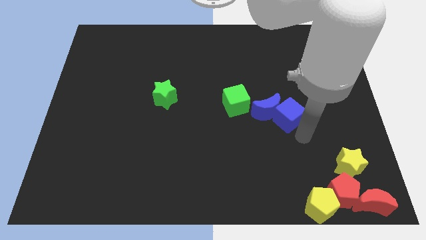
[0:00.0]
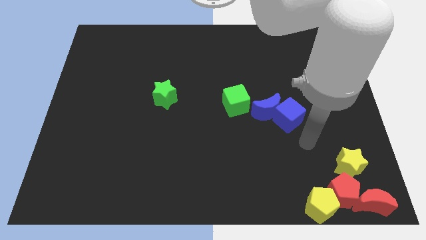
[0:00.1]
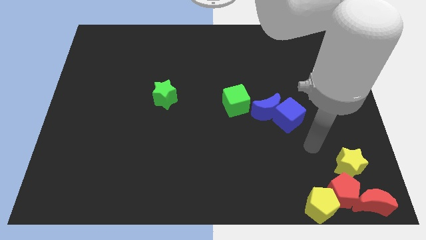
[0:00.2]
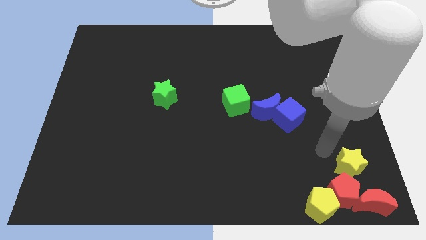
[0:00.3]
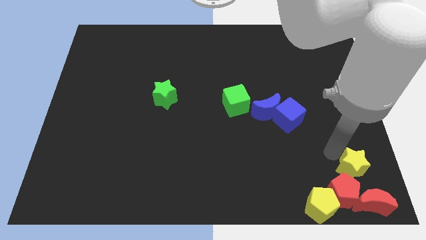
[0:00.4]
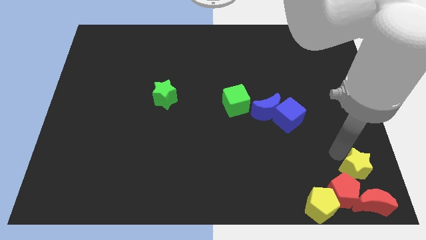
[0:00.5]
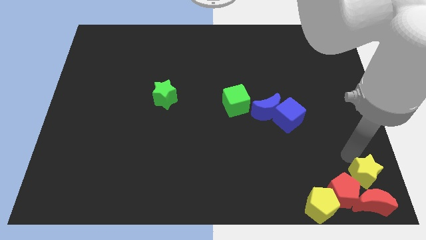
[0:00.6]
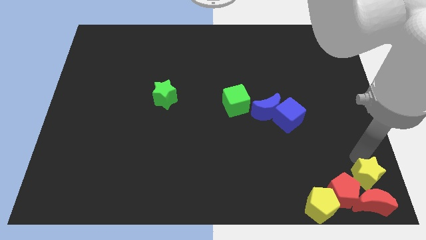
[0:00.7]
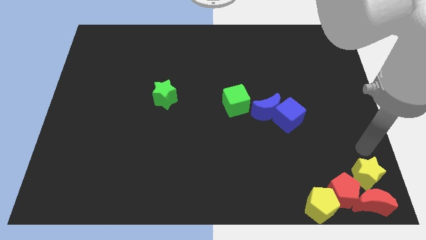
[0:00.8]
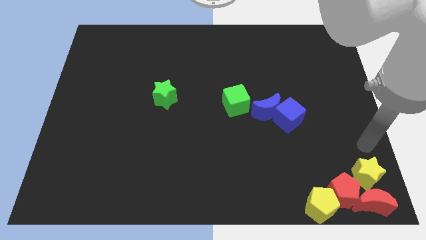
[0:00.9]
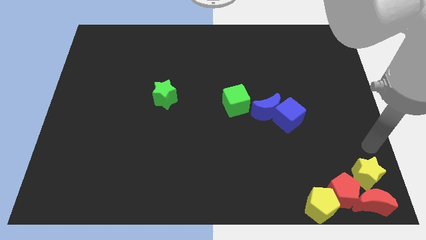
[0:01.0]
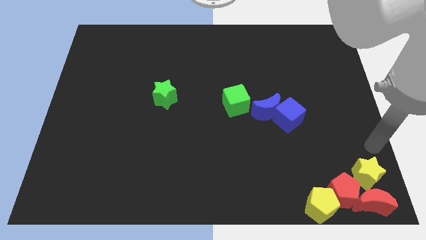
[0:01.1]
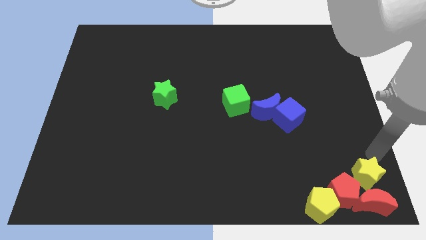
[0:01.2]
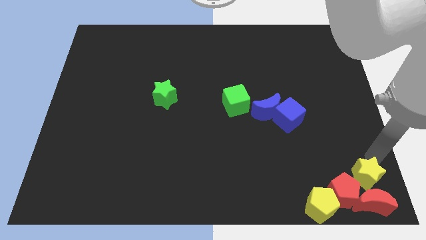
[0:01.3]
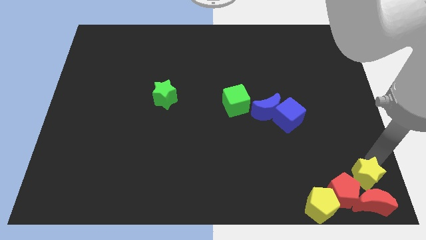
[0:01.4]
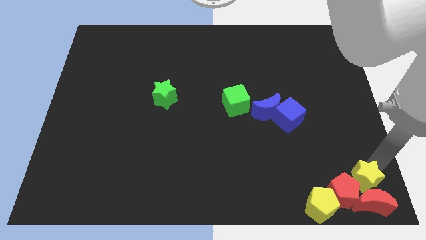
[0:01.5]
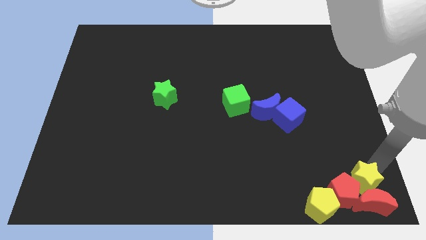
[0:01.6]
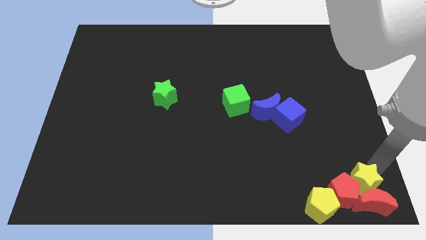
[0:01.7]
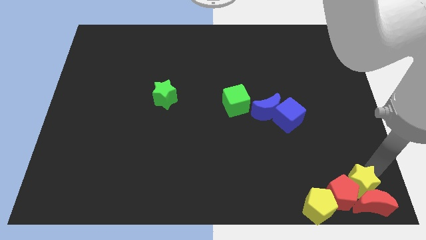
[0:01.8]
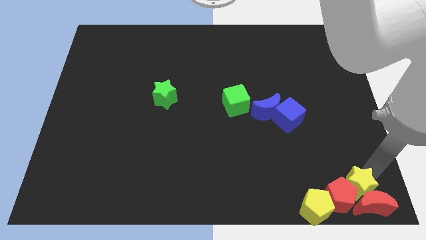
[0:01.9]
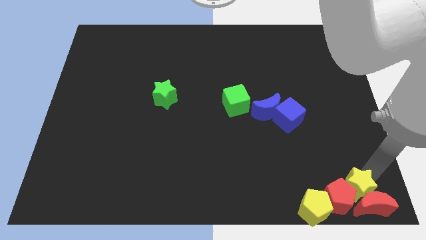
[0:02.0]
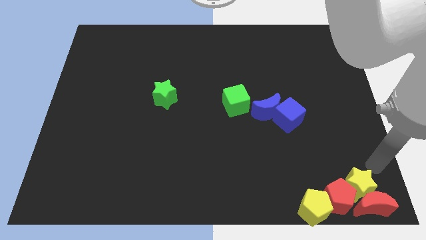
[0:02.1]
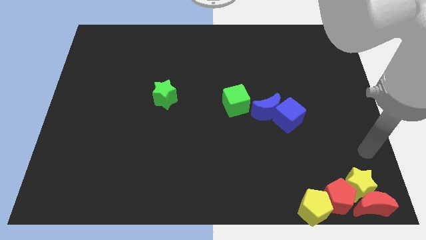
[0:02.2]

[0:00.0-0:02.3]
move the yellow star into the red blocks

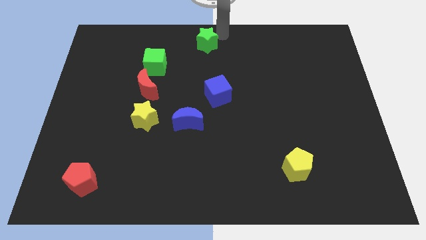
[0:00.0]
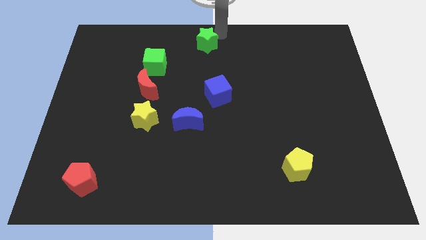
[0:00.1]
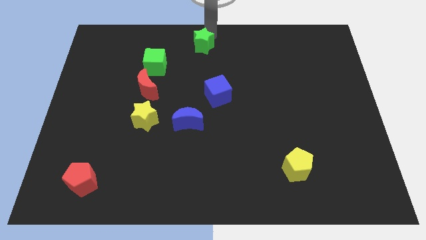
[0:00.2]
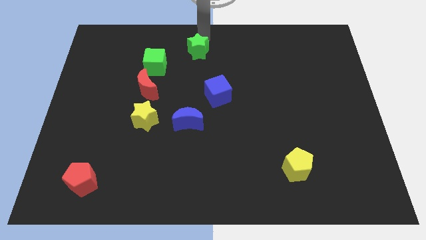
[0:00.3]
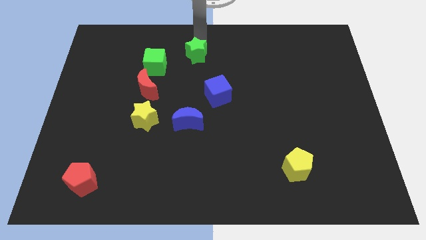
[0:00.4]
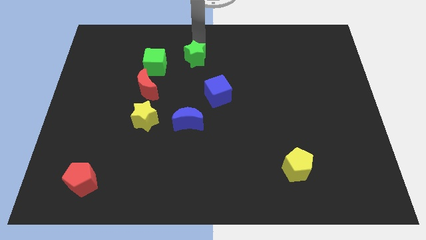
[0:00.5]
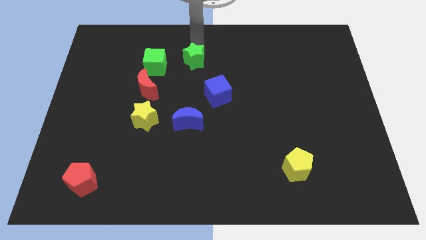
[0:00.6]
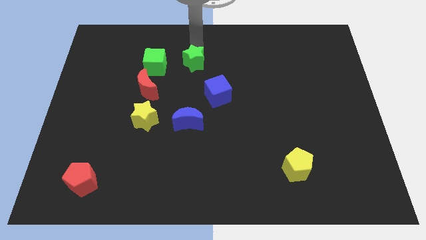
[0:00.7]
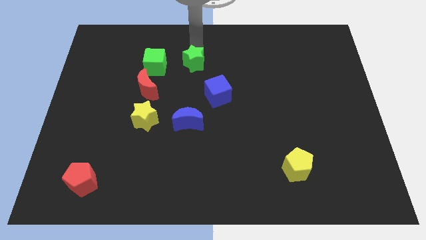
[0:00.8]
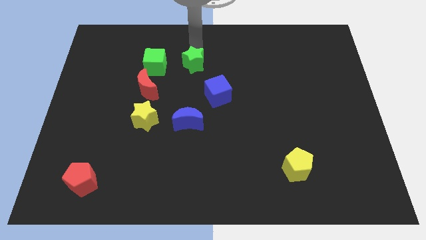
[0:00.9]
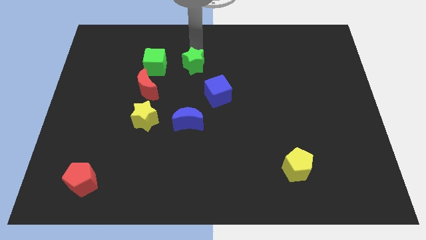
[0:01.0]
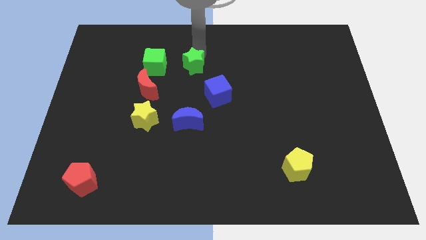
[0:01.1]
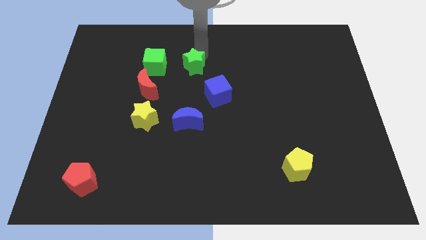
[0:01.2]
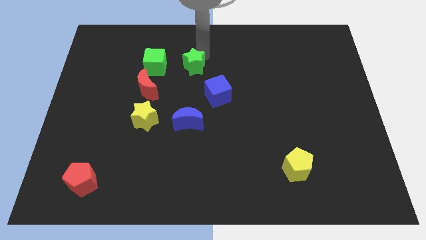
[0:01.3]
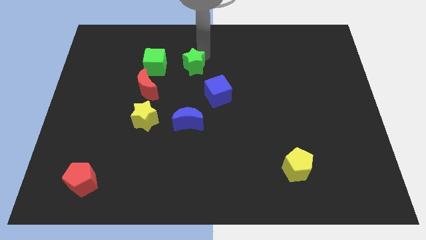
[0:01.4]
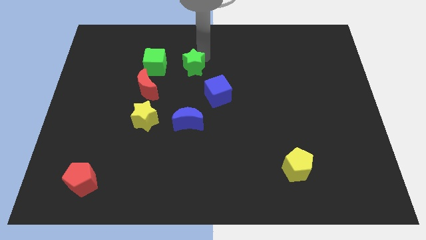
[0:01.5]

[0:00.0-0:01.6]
place the green star right to the green cube

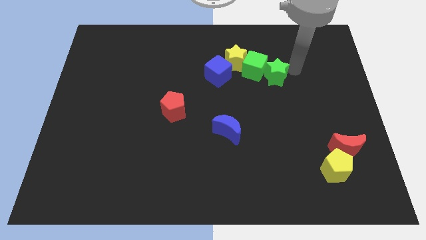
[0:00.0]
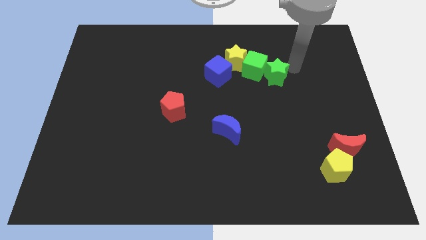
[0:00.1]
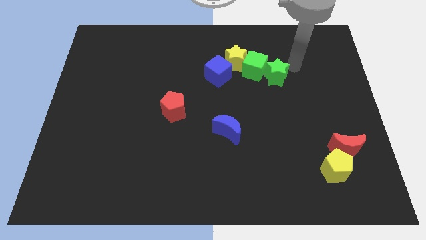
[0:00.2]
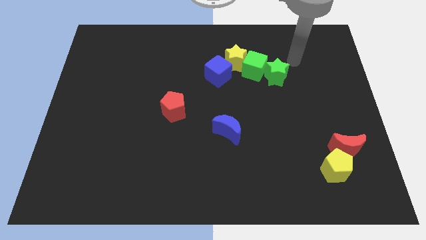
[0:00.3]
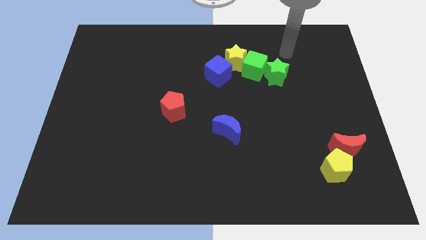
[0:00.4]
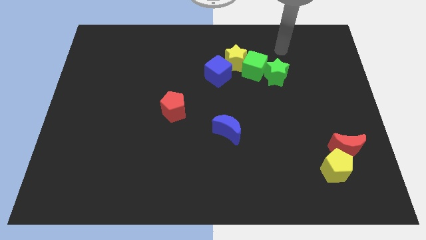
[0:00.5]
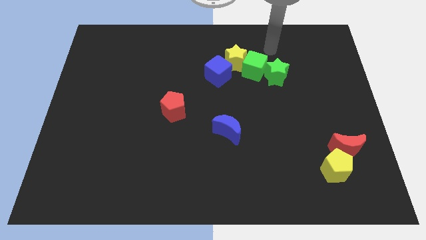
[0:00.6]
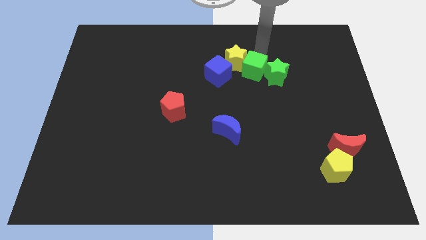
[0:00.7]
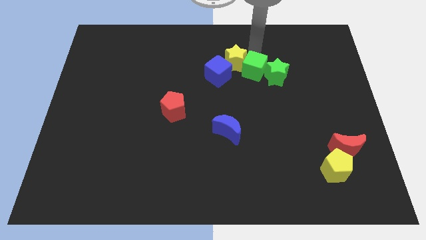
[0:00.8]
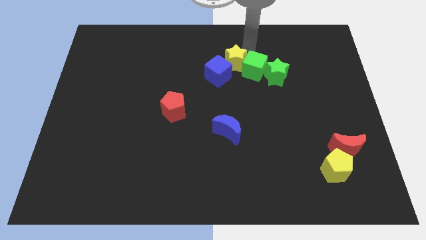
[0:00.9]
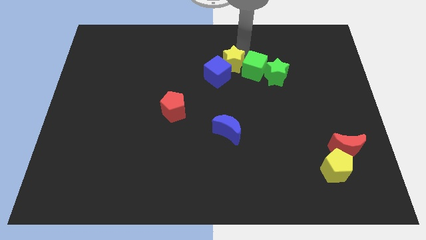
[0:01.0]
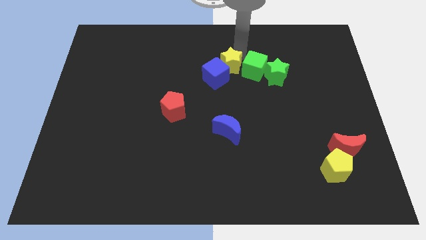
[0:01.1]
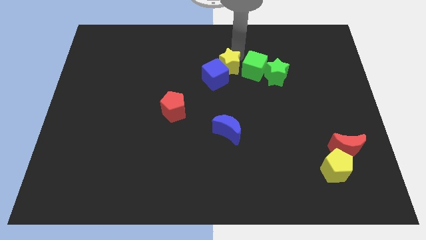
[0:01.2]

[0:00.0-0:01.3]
tap the top side of the yellow star

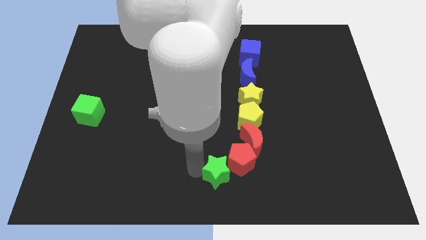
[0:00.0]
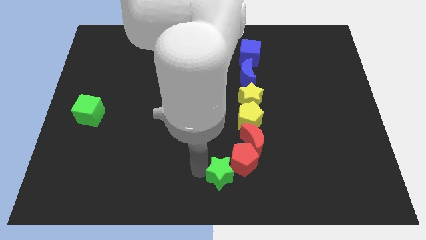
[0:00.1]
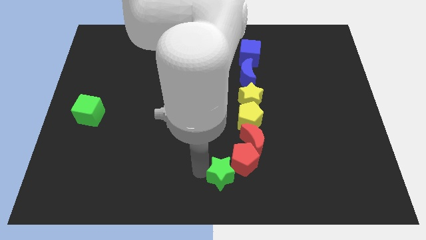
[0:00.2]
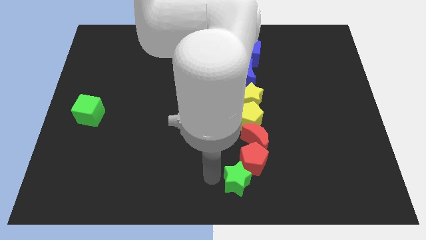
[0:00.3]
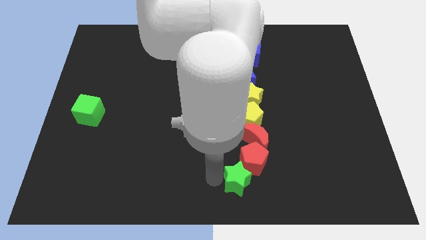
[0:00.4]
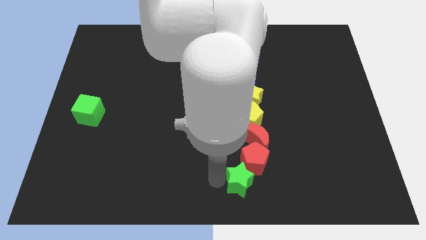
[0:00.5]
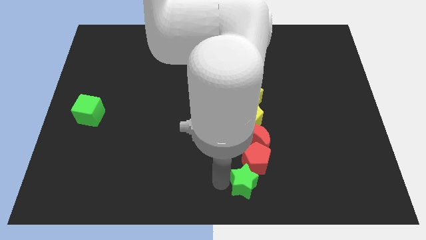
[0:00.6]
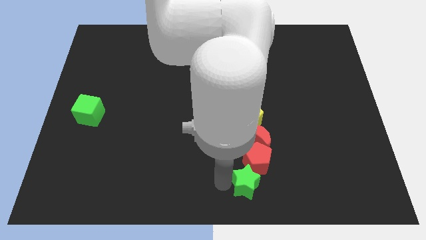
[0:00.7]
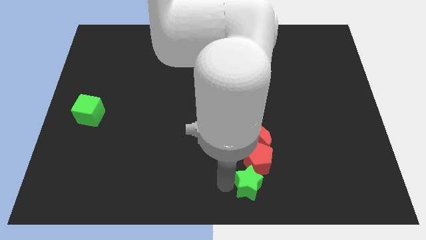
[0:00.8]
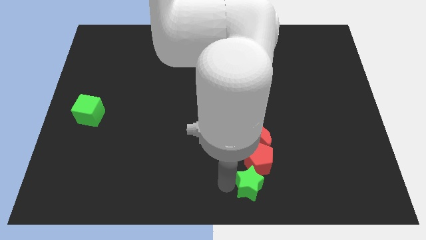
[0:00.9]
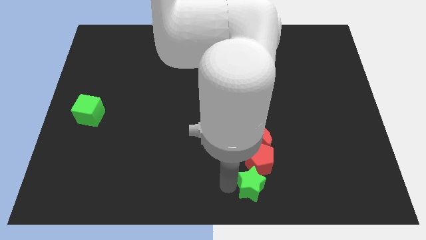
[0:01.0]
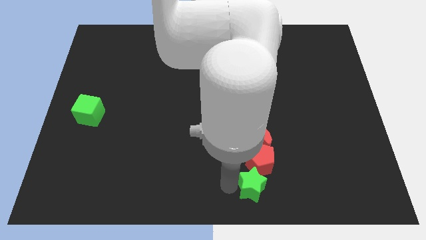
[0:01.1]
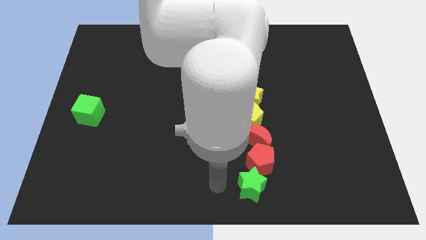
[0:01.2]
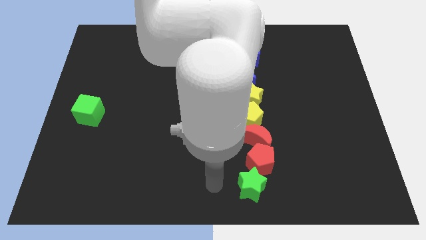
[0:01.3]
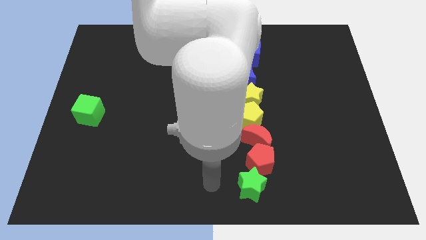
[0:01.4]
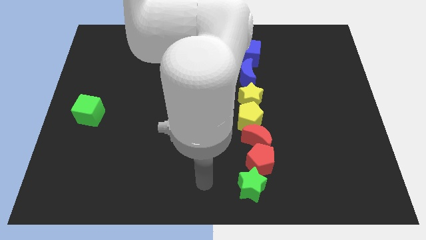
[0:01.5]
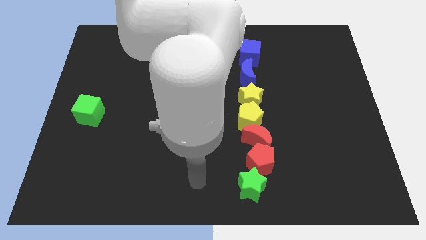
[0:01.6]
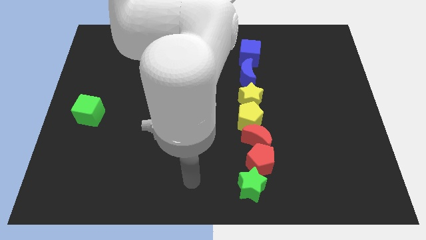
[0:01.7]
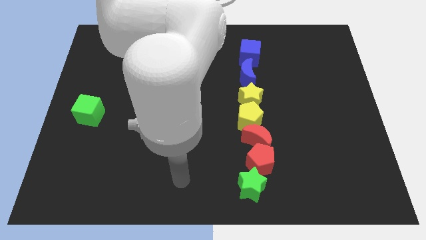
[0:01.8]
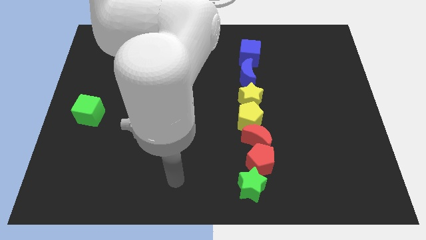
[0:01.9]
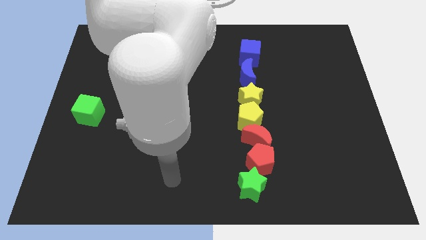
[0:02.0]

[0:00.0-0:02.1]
push the green star slightly downward

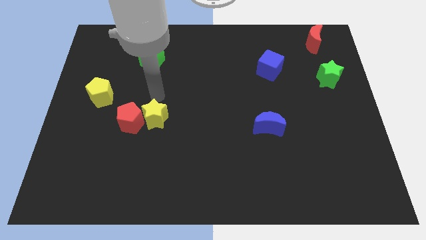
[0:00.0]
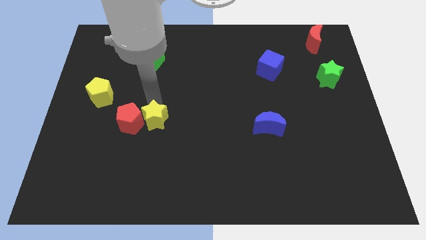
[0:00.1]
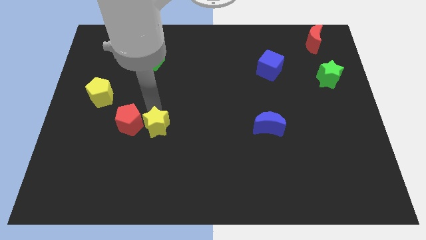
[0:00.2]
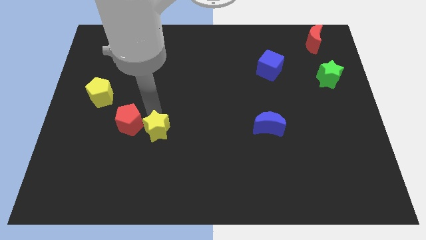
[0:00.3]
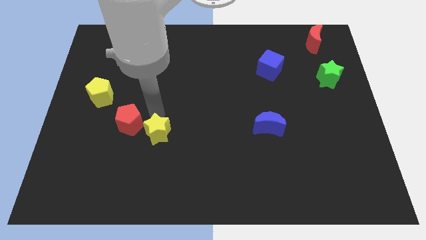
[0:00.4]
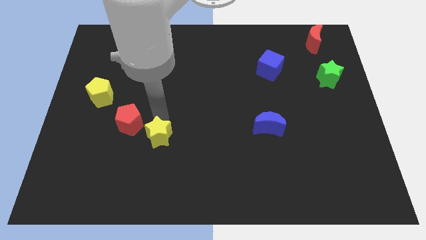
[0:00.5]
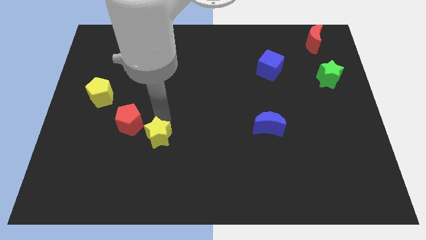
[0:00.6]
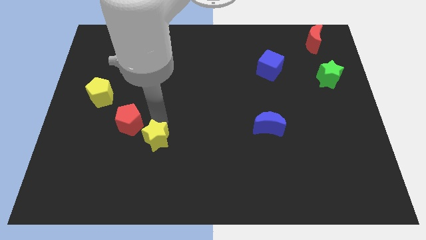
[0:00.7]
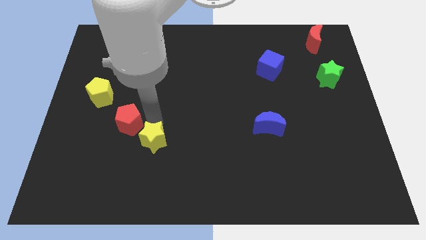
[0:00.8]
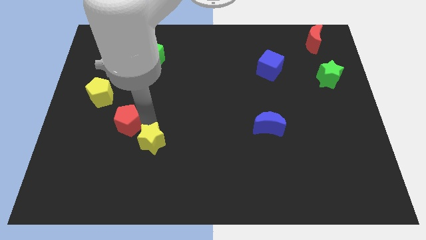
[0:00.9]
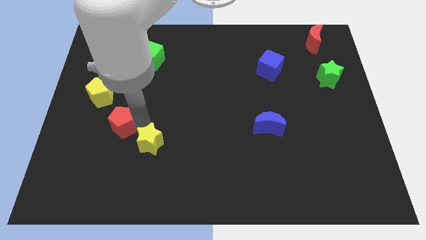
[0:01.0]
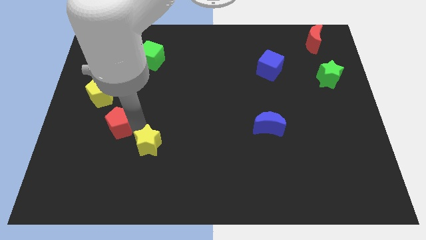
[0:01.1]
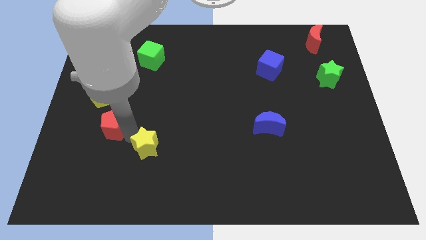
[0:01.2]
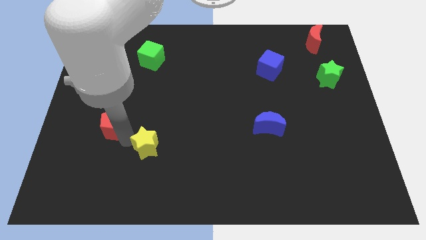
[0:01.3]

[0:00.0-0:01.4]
separate the yellow star from the red pentagon

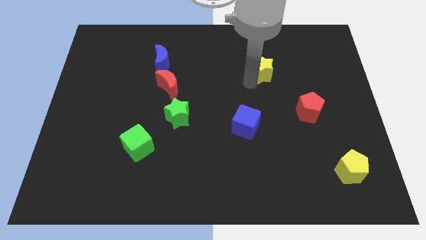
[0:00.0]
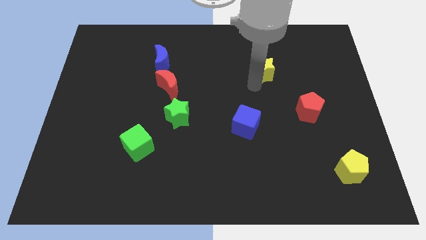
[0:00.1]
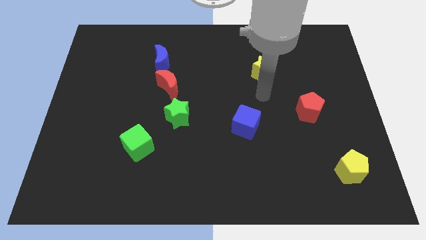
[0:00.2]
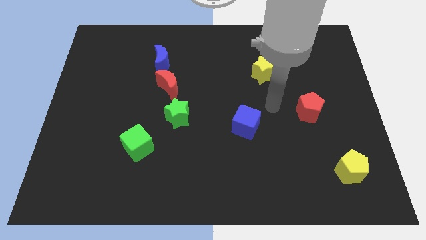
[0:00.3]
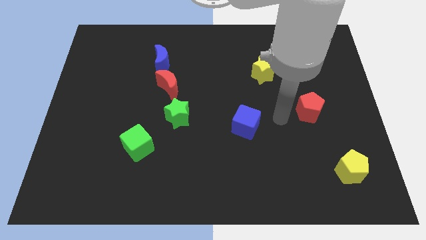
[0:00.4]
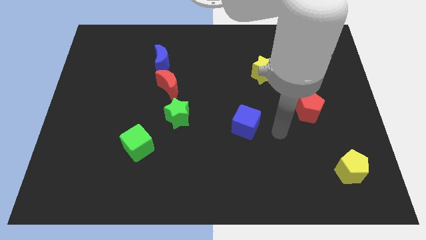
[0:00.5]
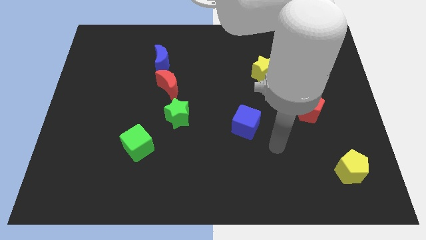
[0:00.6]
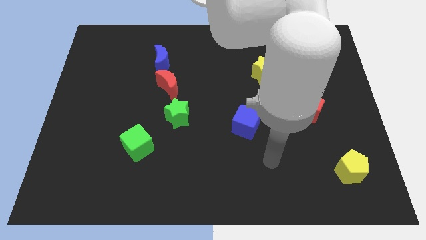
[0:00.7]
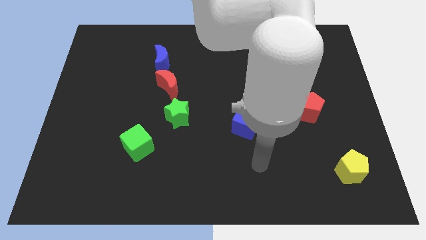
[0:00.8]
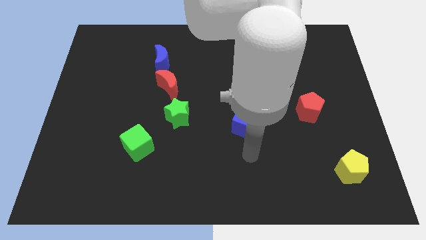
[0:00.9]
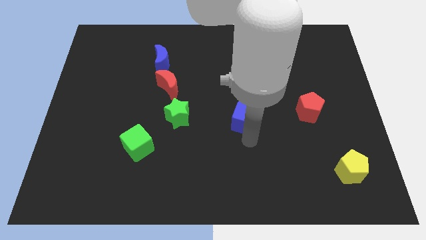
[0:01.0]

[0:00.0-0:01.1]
move your arm at the bottom of the blue cube
